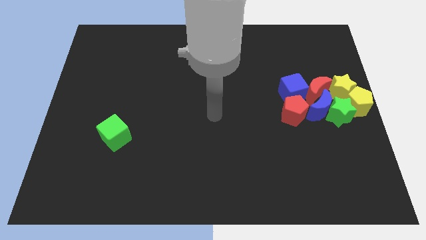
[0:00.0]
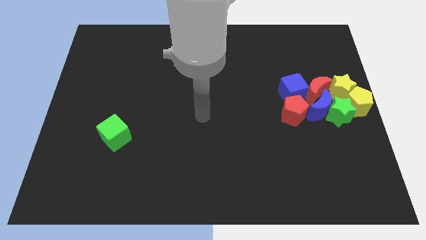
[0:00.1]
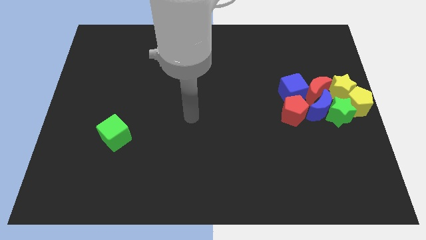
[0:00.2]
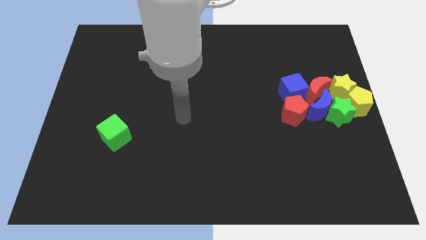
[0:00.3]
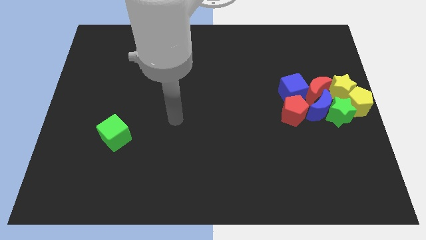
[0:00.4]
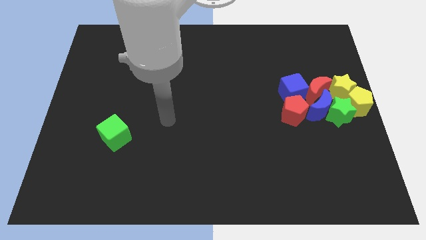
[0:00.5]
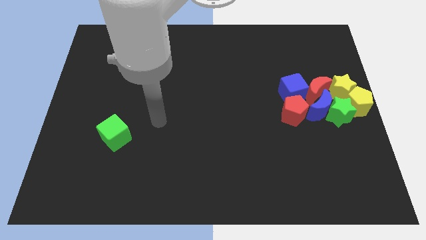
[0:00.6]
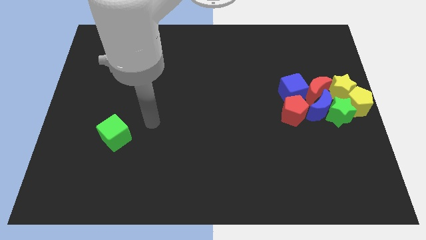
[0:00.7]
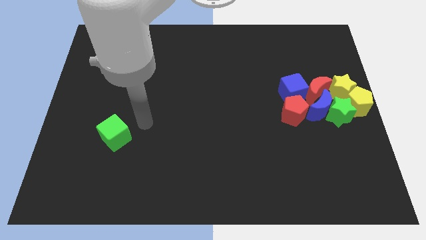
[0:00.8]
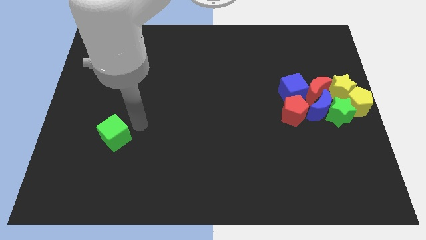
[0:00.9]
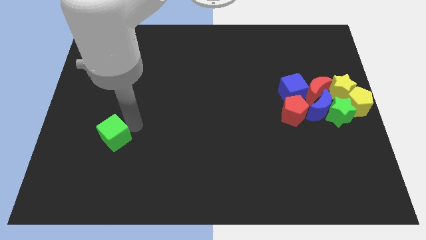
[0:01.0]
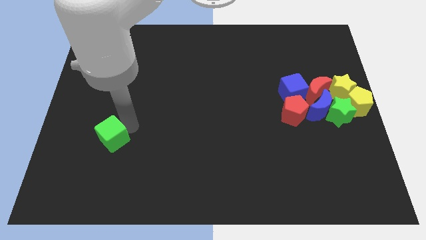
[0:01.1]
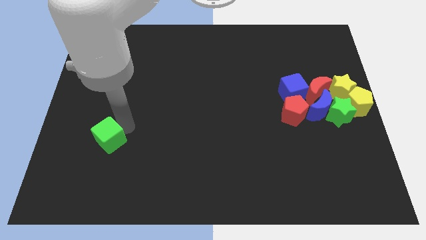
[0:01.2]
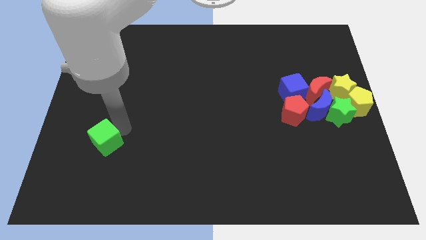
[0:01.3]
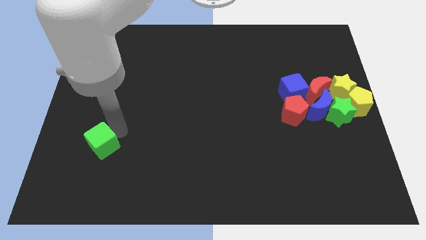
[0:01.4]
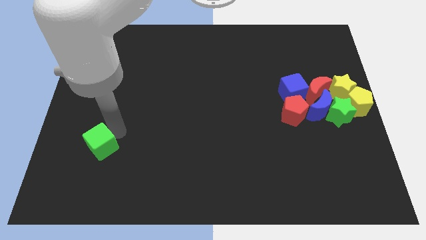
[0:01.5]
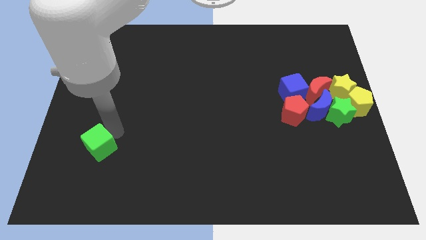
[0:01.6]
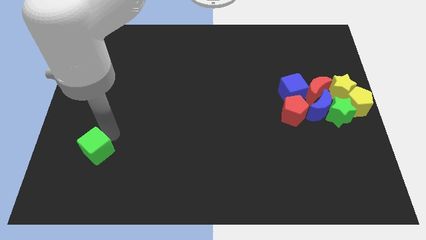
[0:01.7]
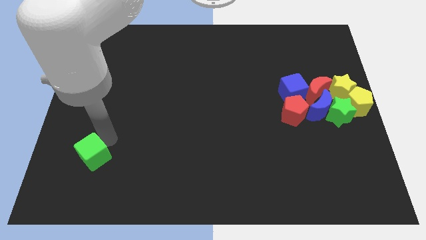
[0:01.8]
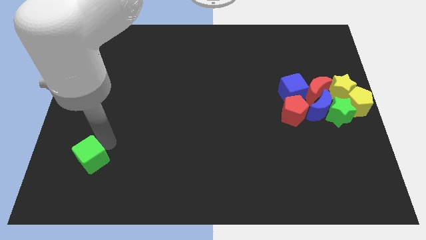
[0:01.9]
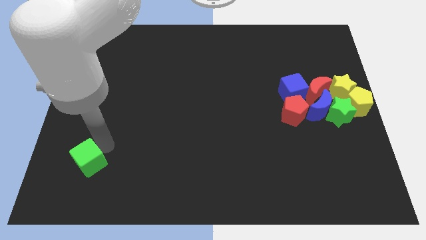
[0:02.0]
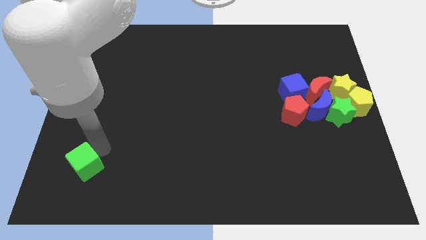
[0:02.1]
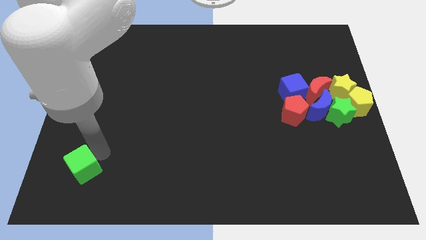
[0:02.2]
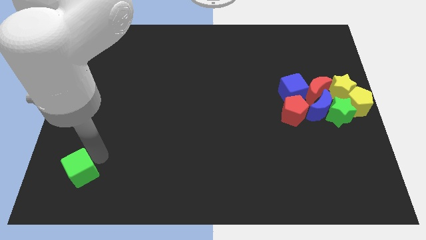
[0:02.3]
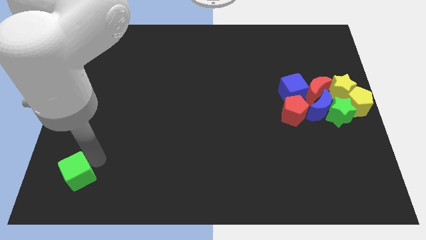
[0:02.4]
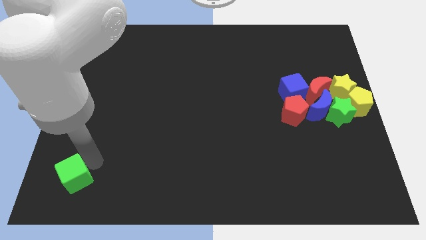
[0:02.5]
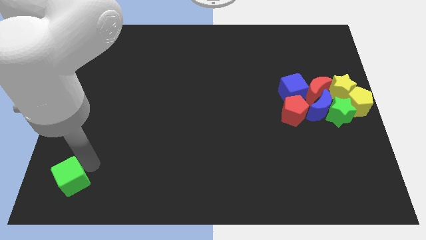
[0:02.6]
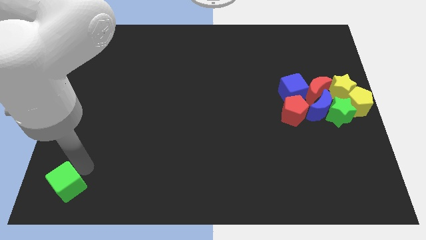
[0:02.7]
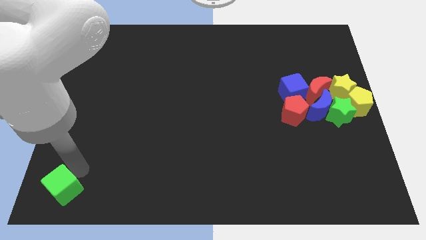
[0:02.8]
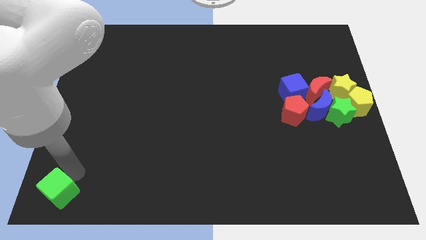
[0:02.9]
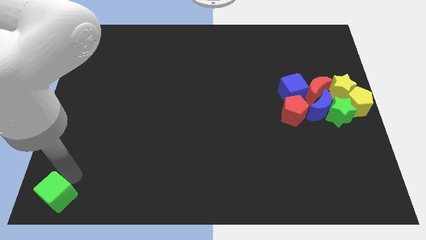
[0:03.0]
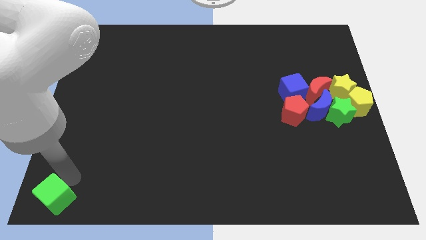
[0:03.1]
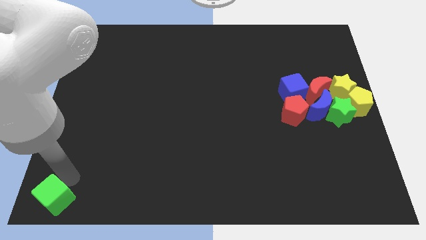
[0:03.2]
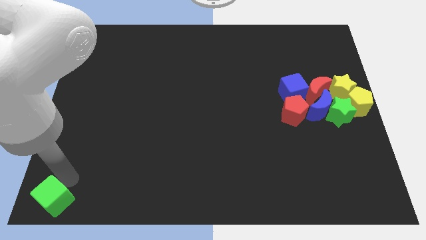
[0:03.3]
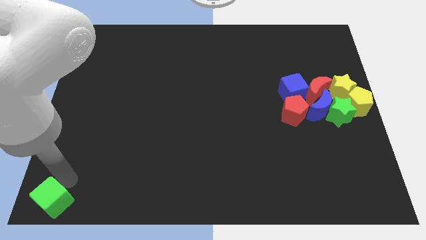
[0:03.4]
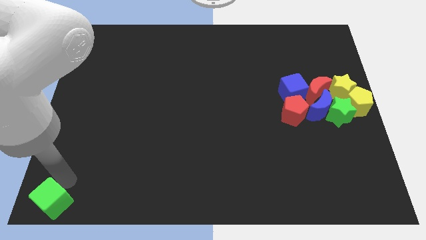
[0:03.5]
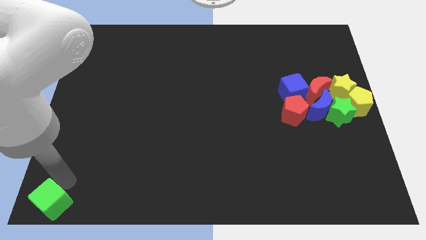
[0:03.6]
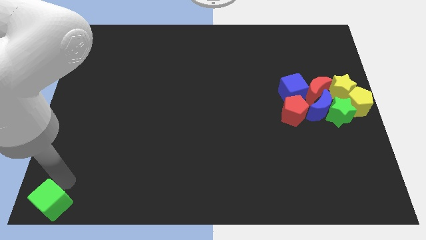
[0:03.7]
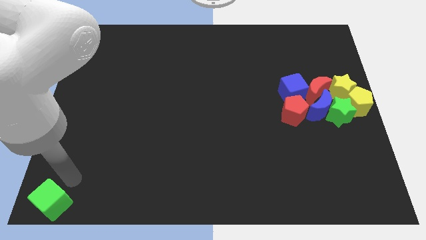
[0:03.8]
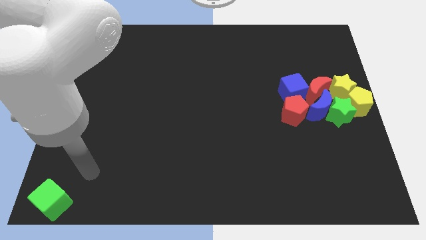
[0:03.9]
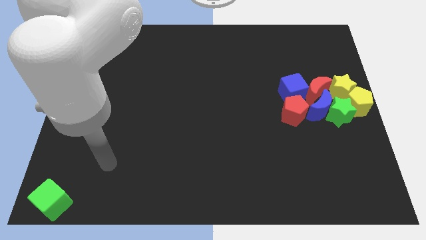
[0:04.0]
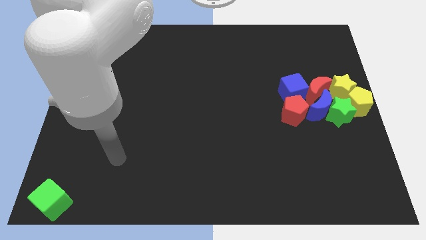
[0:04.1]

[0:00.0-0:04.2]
place the green cube to the bottom left corner of the board

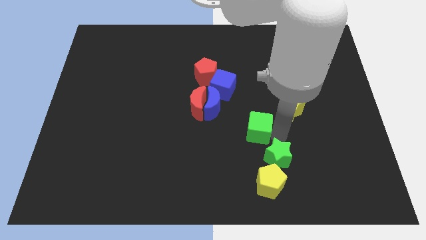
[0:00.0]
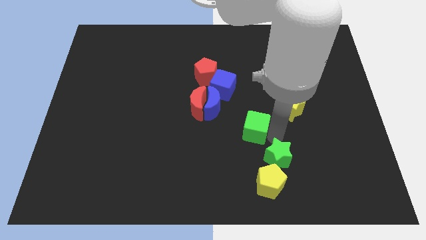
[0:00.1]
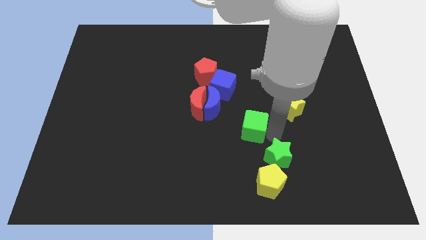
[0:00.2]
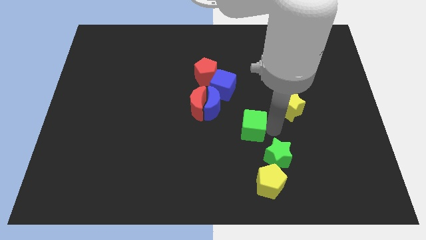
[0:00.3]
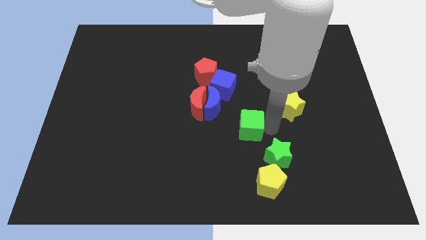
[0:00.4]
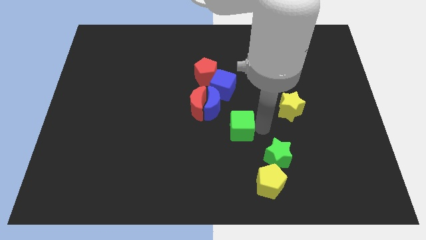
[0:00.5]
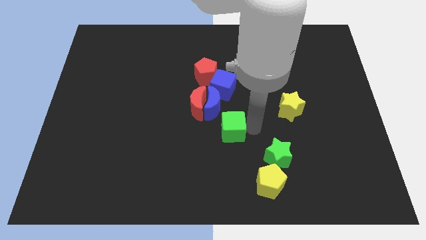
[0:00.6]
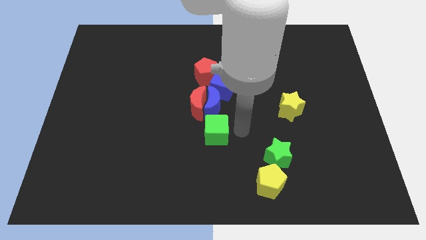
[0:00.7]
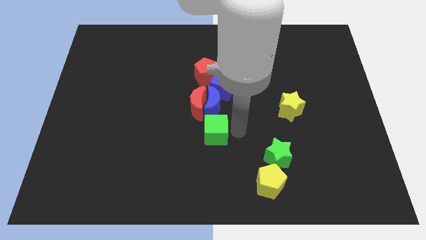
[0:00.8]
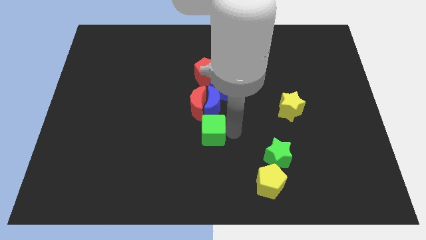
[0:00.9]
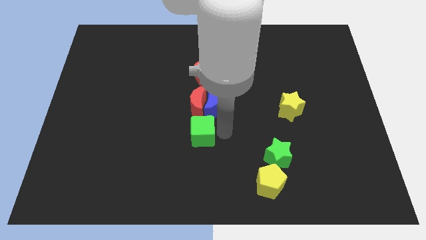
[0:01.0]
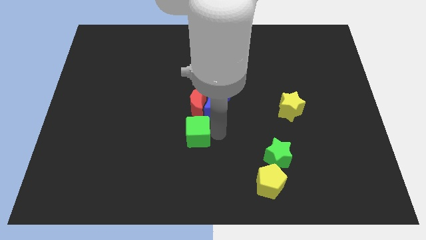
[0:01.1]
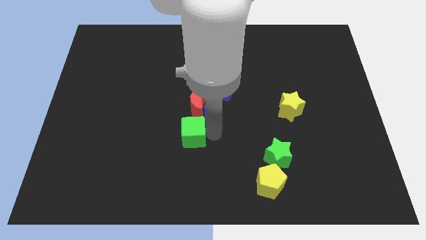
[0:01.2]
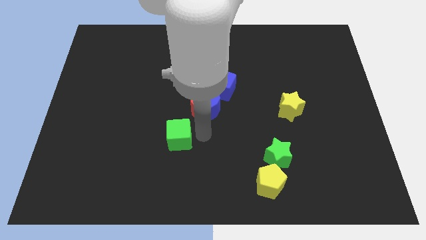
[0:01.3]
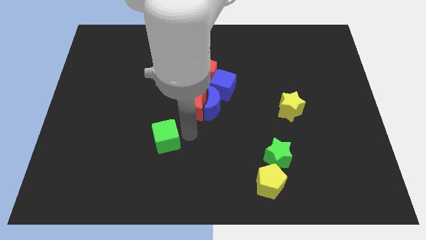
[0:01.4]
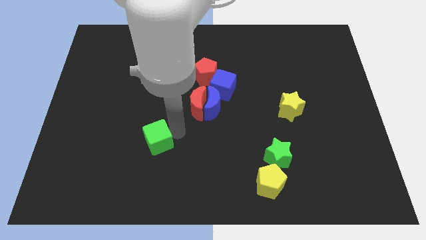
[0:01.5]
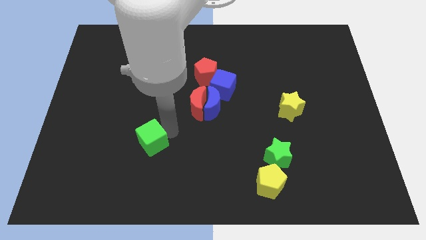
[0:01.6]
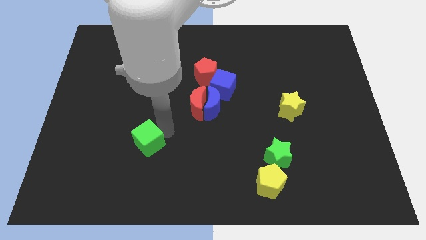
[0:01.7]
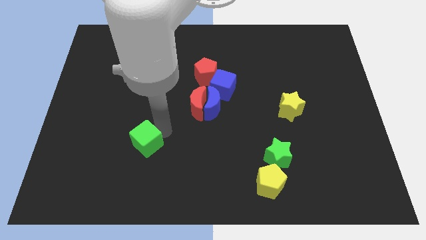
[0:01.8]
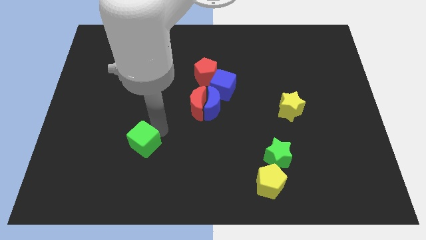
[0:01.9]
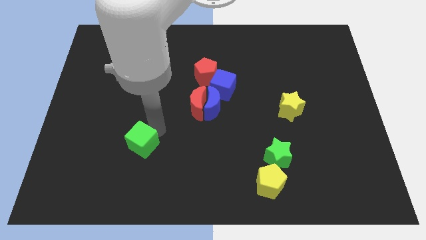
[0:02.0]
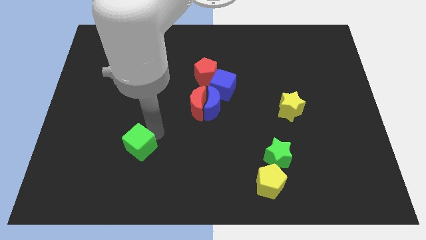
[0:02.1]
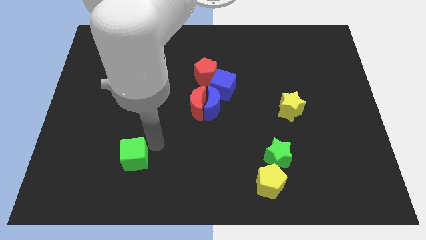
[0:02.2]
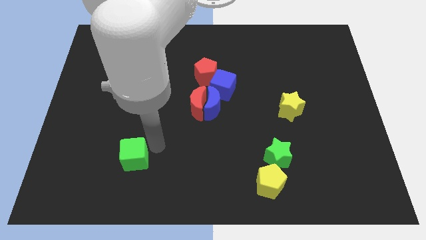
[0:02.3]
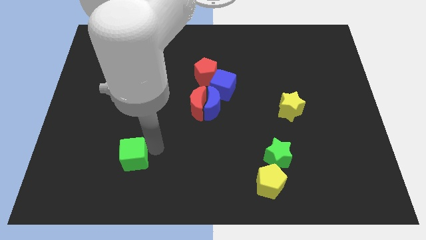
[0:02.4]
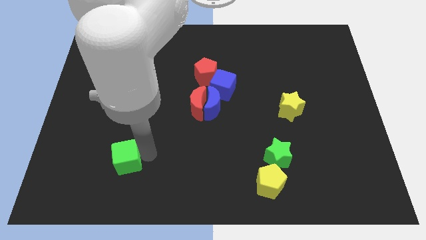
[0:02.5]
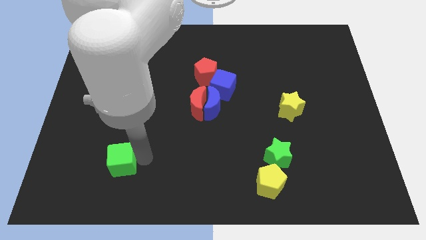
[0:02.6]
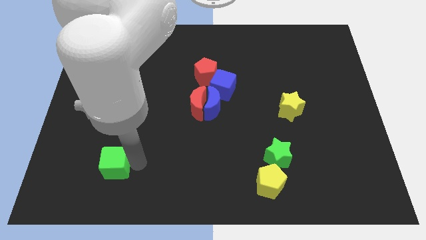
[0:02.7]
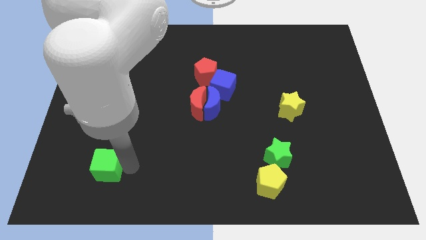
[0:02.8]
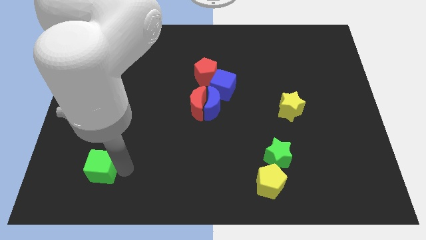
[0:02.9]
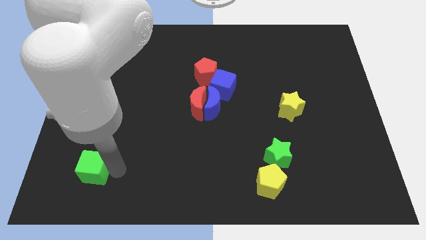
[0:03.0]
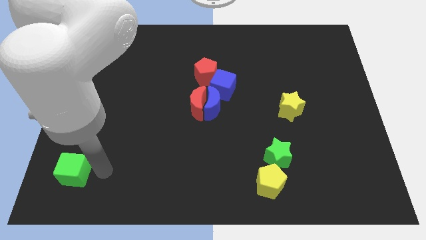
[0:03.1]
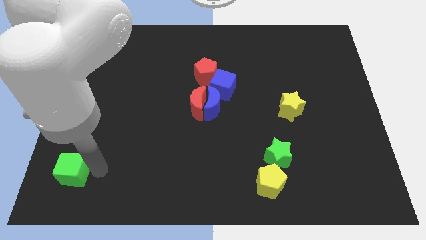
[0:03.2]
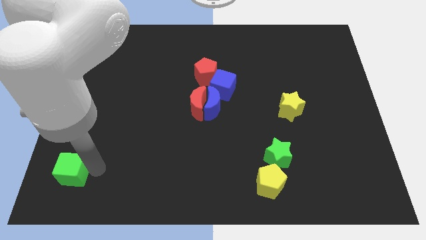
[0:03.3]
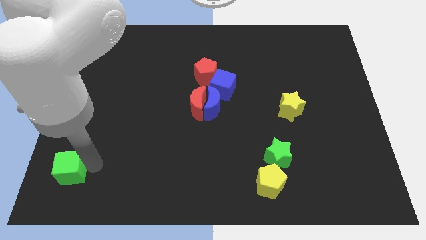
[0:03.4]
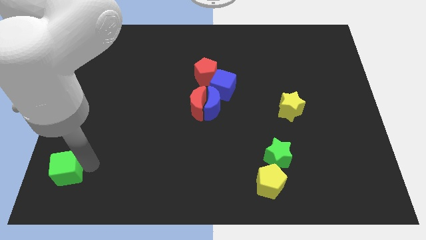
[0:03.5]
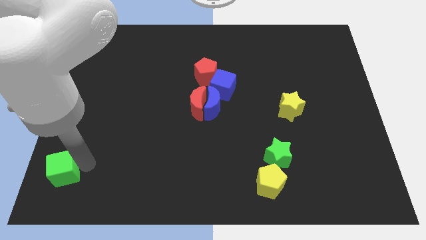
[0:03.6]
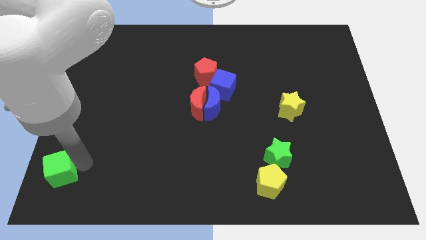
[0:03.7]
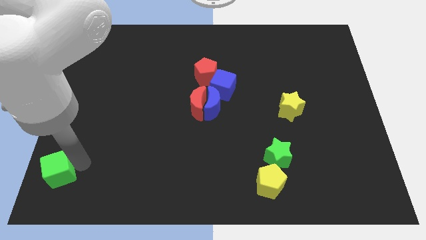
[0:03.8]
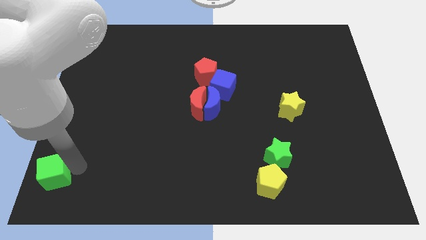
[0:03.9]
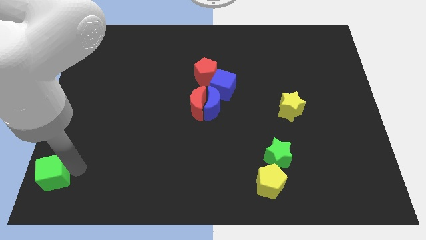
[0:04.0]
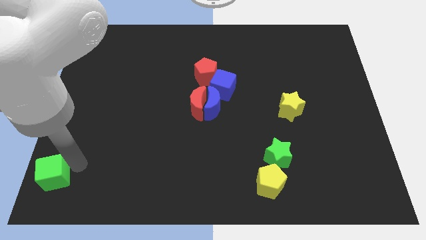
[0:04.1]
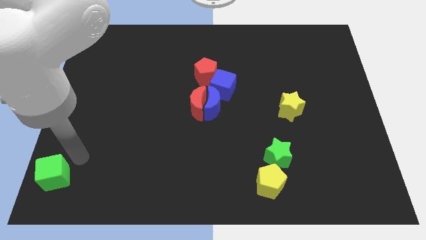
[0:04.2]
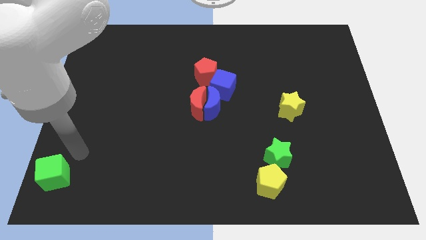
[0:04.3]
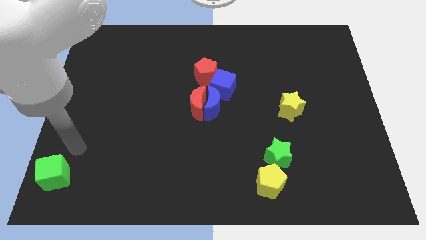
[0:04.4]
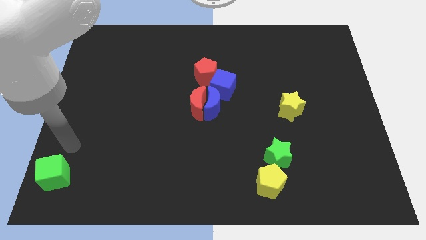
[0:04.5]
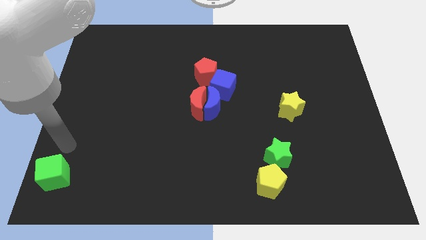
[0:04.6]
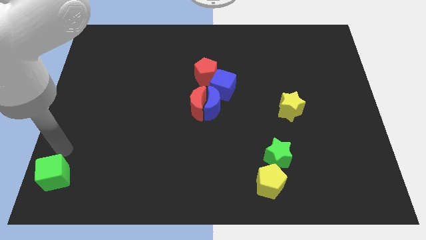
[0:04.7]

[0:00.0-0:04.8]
push the green cube to the left side of the board
